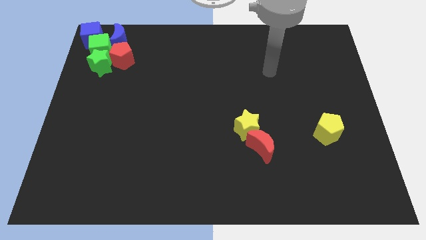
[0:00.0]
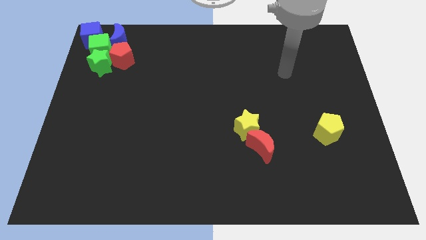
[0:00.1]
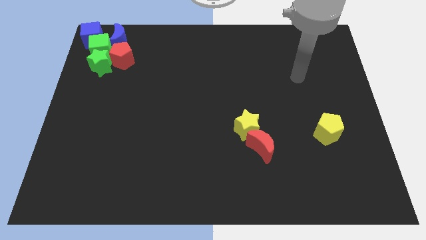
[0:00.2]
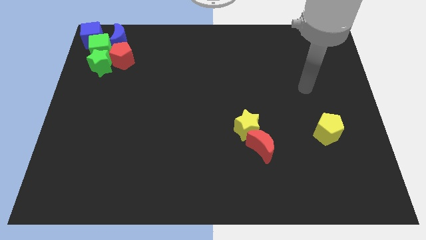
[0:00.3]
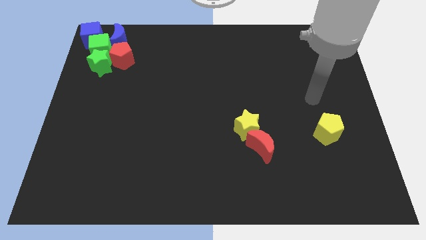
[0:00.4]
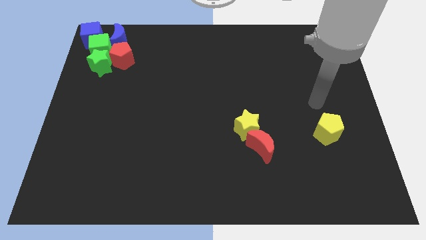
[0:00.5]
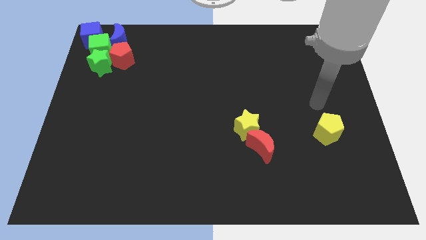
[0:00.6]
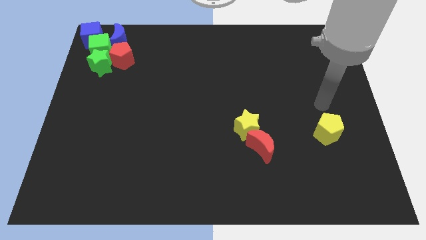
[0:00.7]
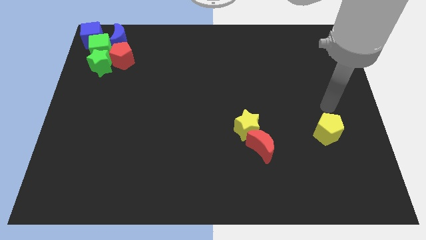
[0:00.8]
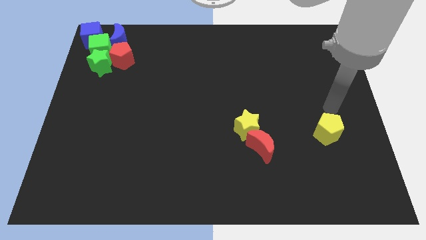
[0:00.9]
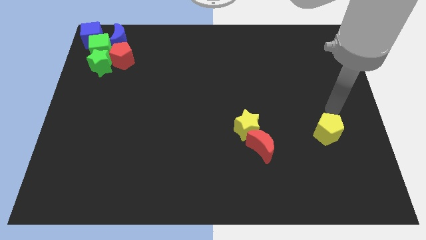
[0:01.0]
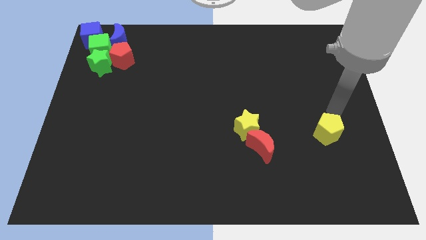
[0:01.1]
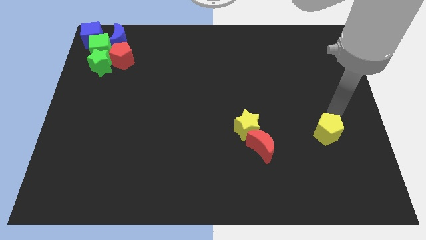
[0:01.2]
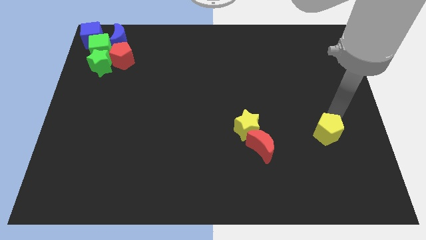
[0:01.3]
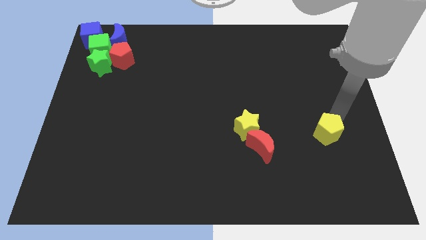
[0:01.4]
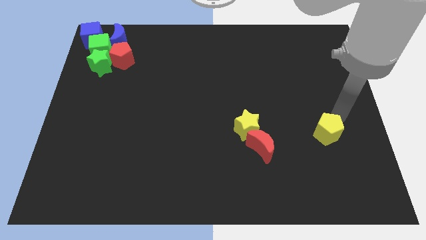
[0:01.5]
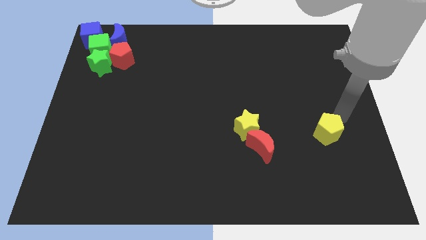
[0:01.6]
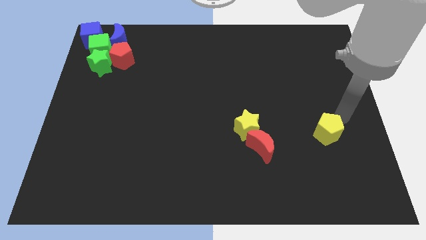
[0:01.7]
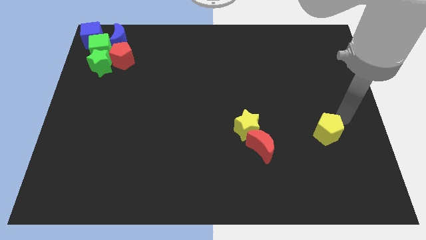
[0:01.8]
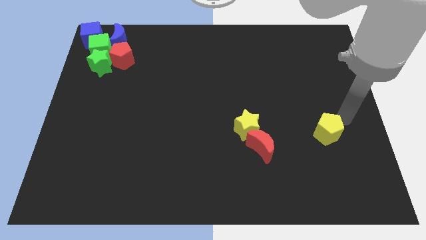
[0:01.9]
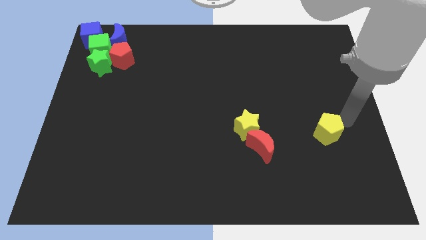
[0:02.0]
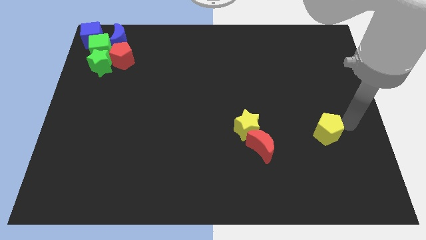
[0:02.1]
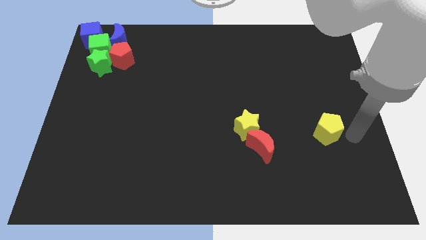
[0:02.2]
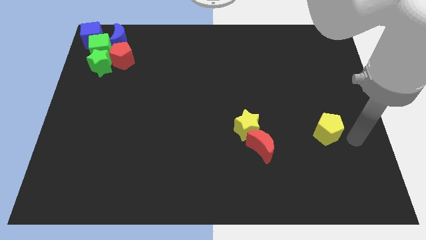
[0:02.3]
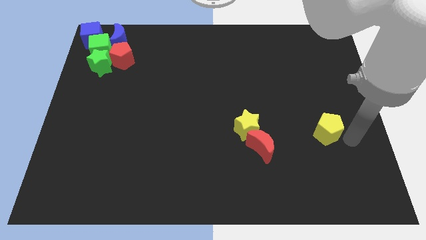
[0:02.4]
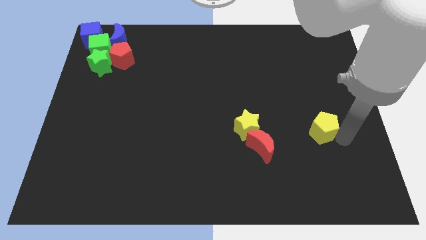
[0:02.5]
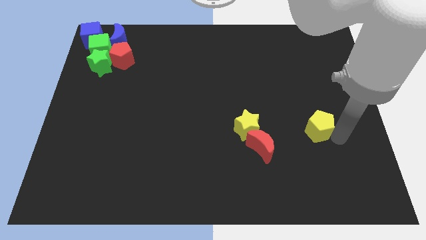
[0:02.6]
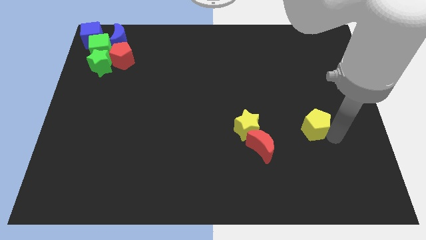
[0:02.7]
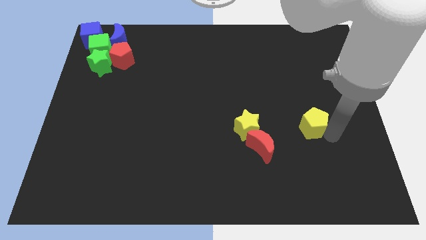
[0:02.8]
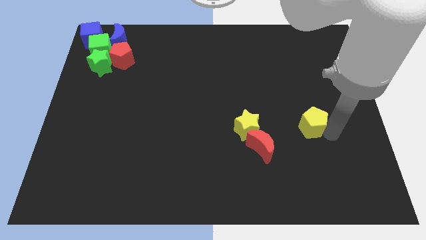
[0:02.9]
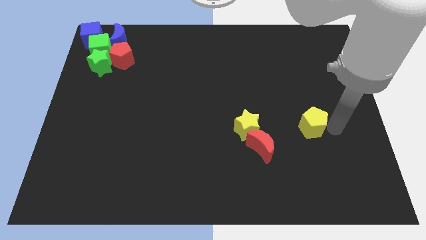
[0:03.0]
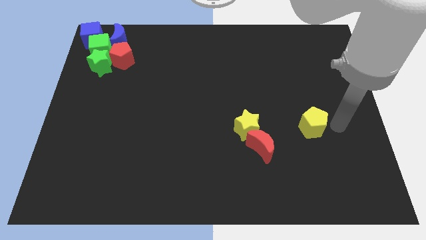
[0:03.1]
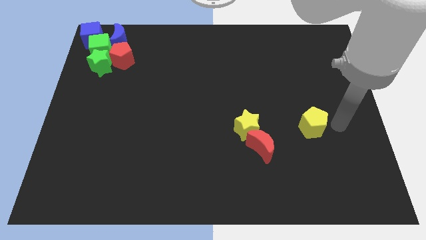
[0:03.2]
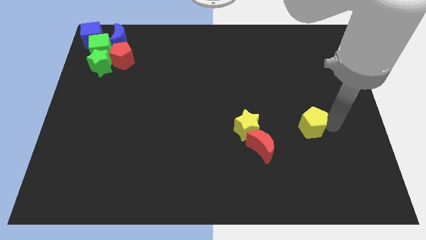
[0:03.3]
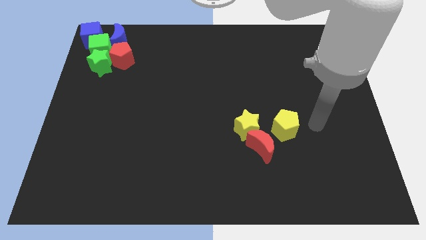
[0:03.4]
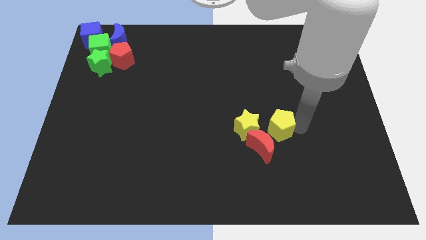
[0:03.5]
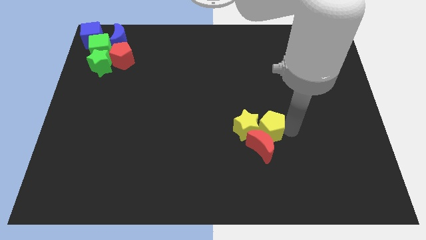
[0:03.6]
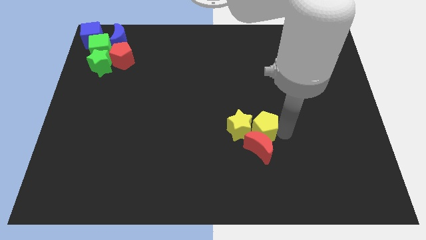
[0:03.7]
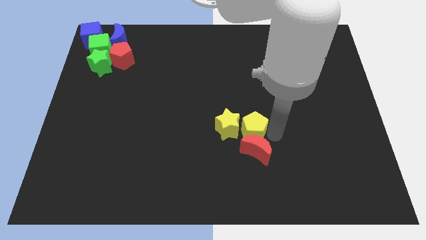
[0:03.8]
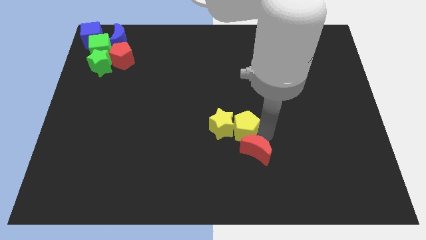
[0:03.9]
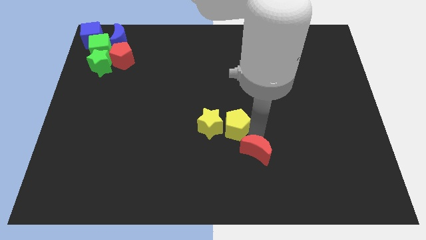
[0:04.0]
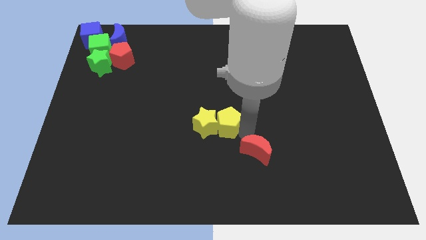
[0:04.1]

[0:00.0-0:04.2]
push the yellow pentagon into the yellow star

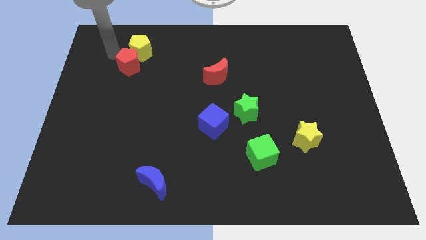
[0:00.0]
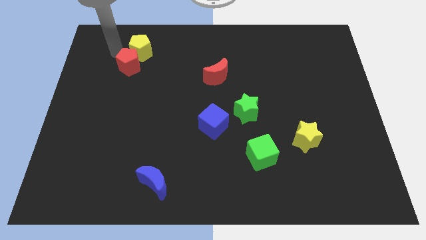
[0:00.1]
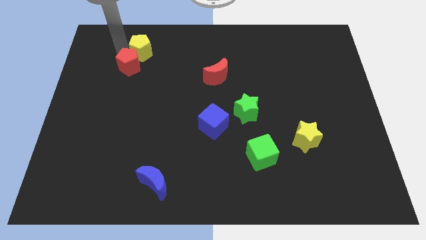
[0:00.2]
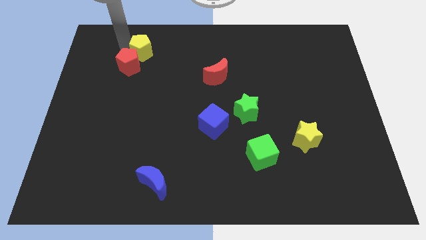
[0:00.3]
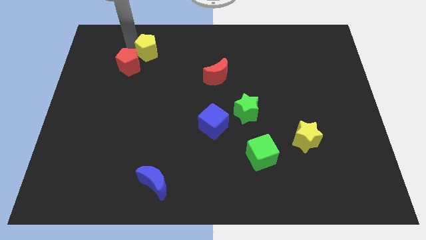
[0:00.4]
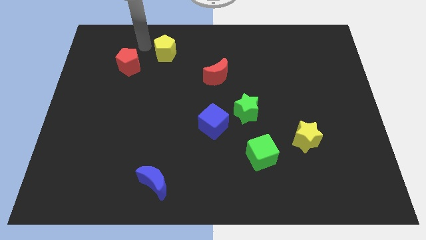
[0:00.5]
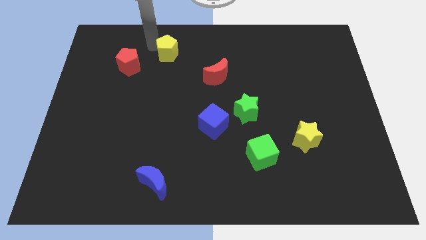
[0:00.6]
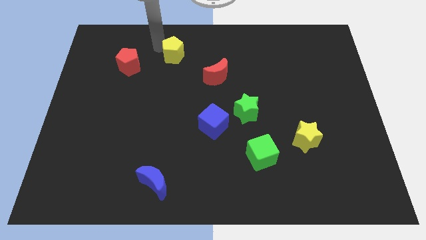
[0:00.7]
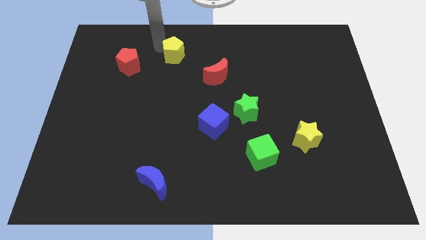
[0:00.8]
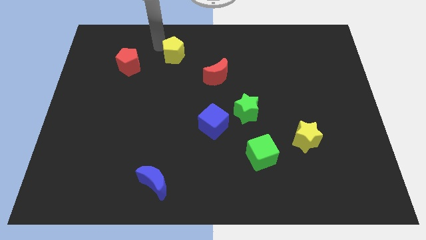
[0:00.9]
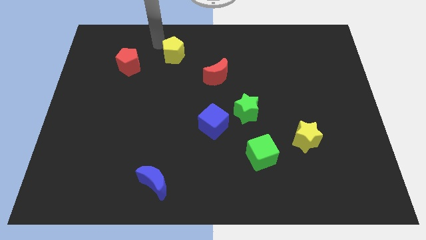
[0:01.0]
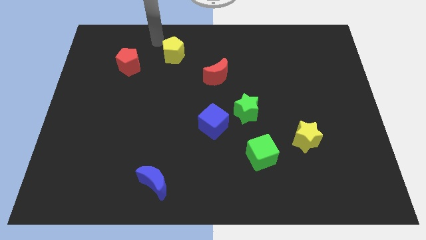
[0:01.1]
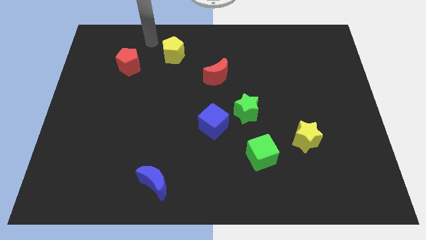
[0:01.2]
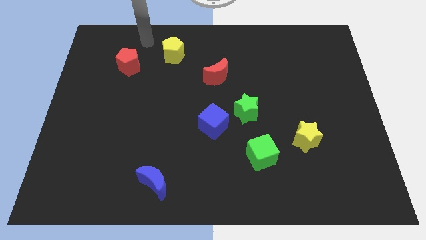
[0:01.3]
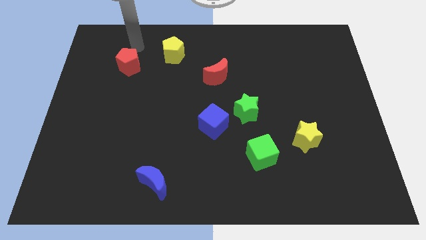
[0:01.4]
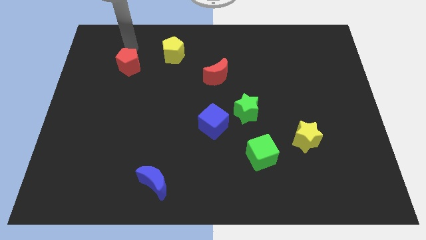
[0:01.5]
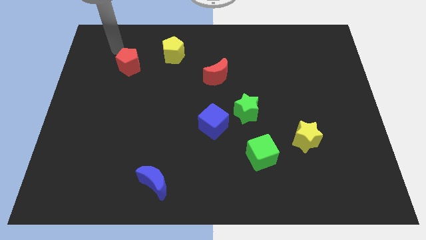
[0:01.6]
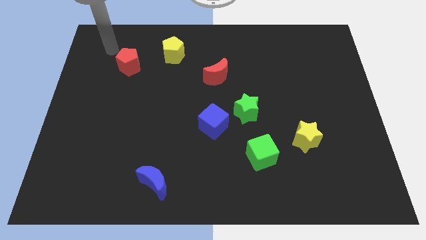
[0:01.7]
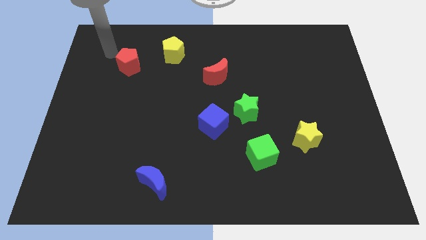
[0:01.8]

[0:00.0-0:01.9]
move the yellow pentagon diagonally right of the red crescent

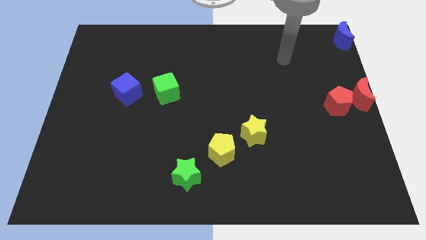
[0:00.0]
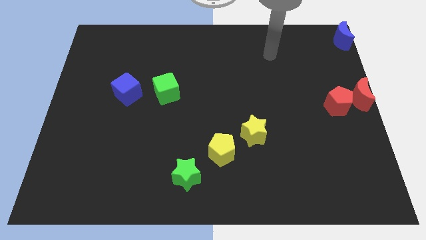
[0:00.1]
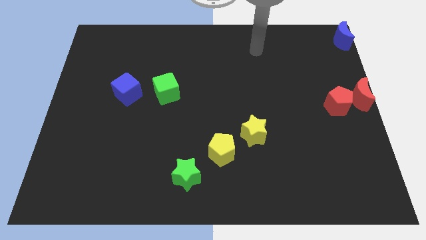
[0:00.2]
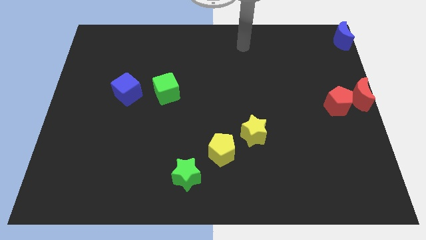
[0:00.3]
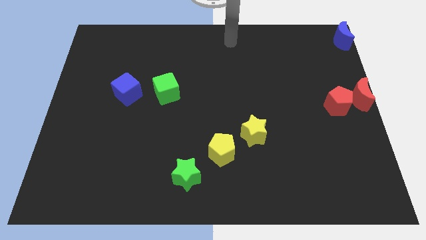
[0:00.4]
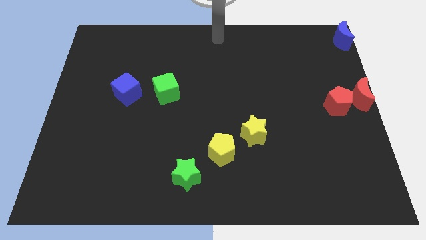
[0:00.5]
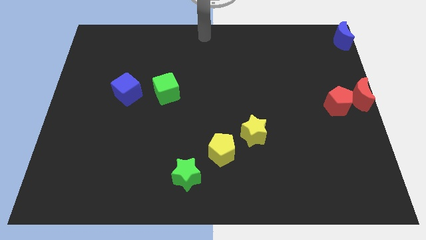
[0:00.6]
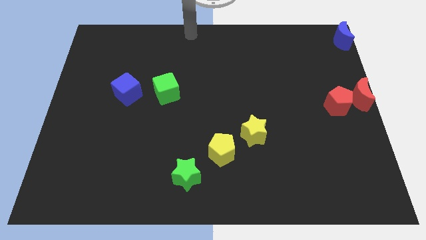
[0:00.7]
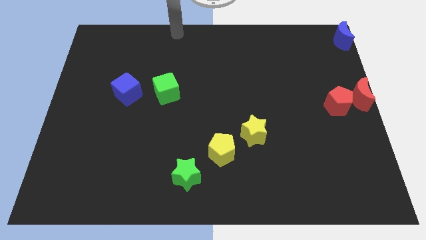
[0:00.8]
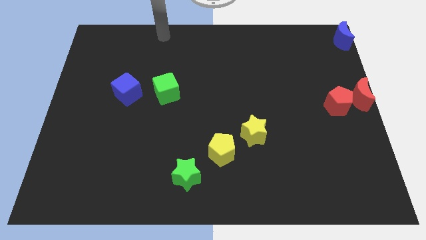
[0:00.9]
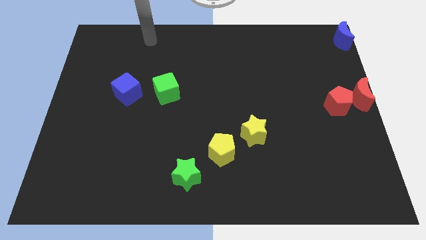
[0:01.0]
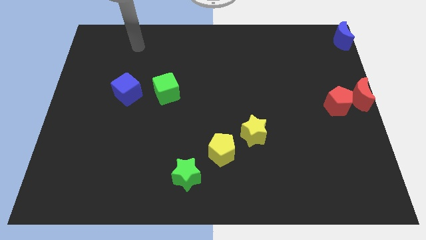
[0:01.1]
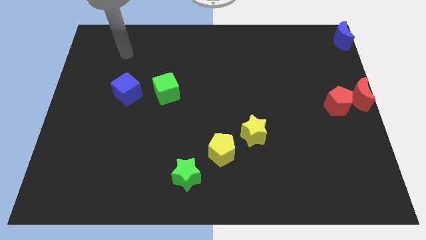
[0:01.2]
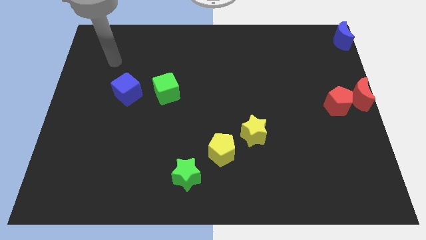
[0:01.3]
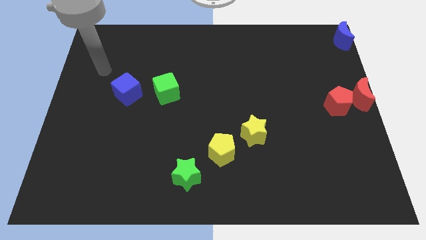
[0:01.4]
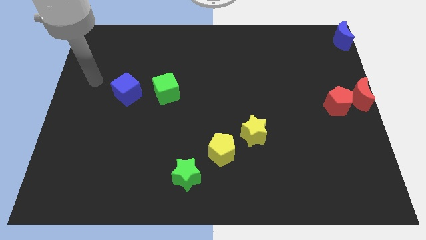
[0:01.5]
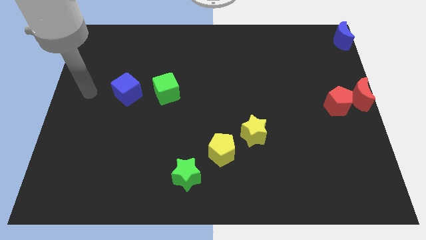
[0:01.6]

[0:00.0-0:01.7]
move your arm towards the blue cube

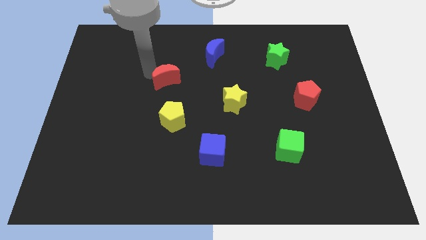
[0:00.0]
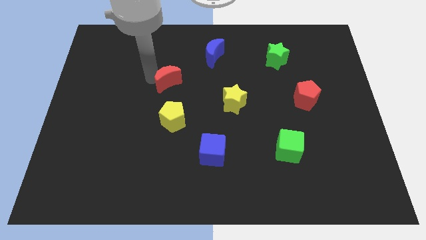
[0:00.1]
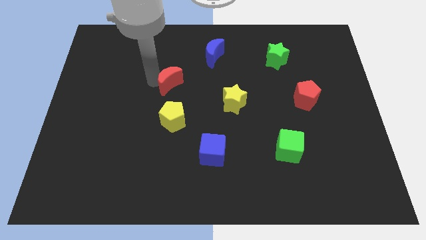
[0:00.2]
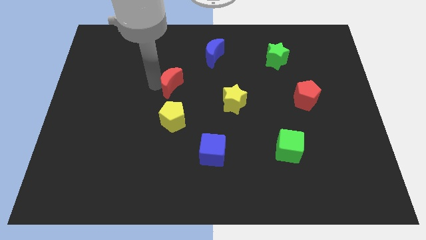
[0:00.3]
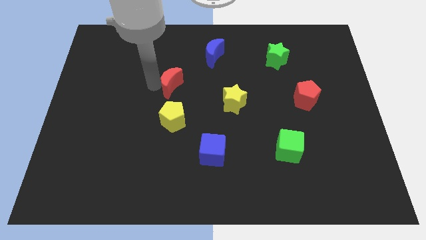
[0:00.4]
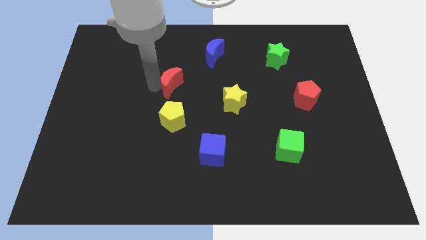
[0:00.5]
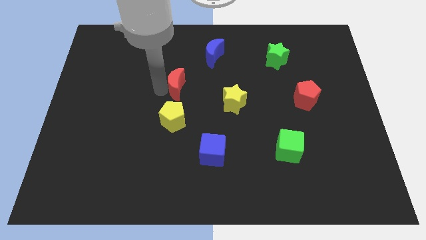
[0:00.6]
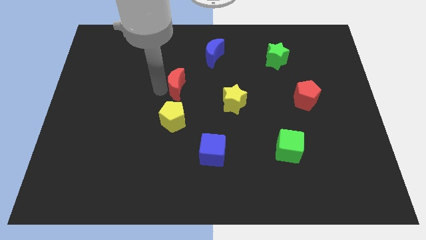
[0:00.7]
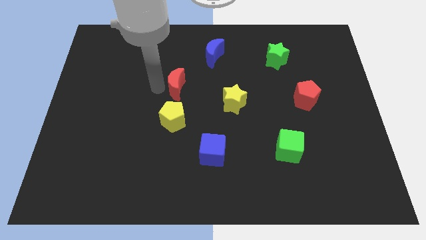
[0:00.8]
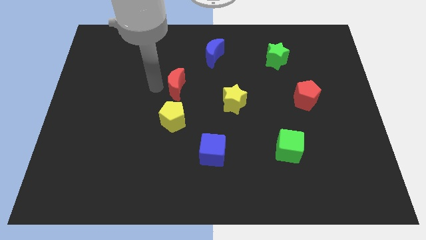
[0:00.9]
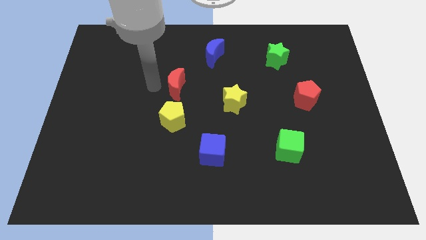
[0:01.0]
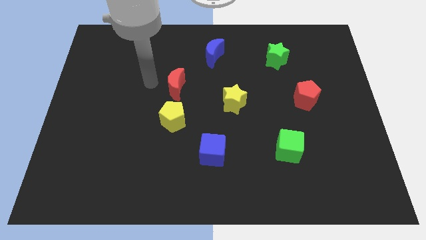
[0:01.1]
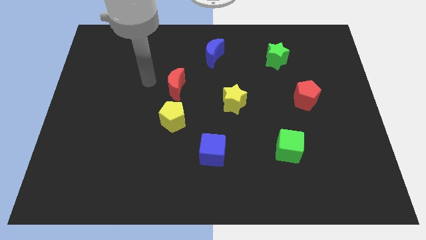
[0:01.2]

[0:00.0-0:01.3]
move the red crescent above the yellow pentagon
